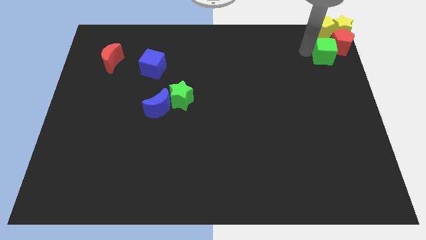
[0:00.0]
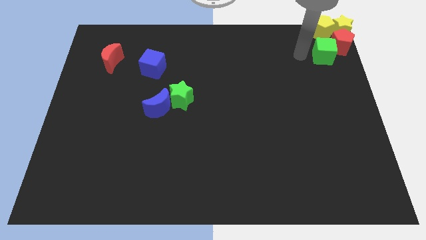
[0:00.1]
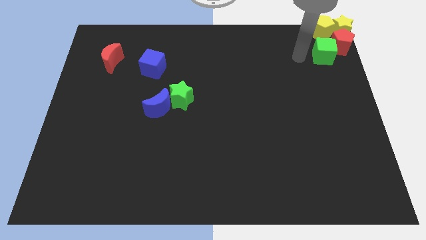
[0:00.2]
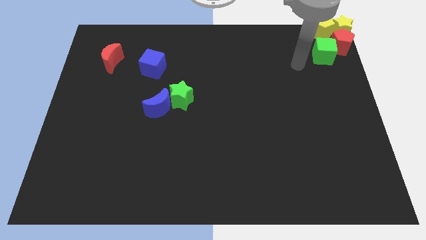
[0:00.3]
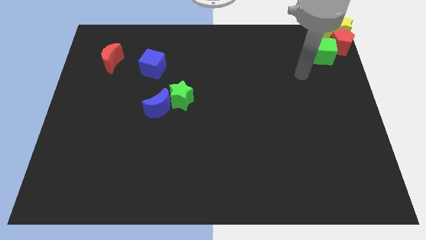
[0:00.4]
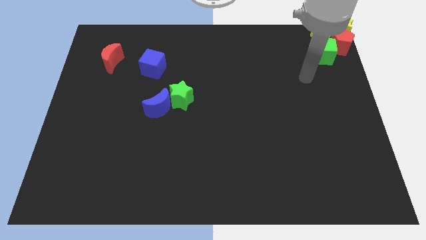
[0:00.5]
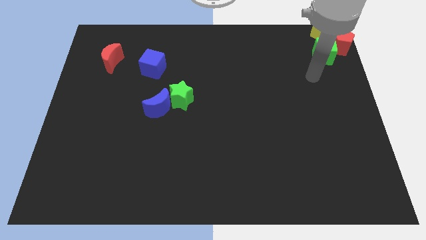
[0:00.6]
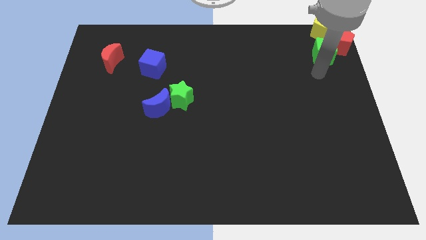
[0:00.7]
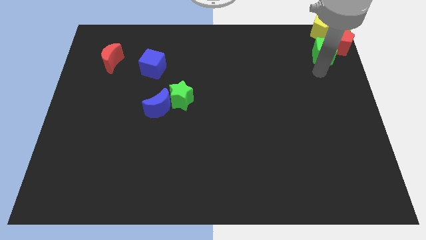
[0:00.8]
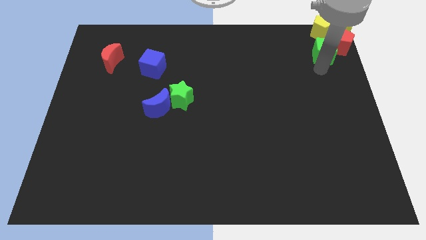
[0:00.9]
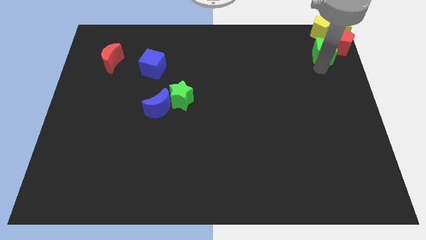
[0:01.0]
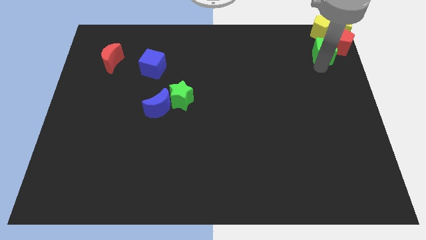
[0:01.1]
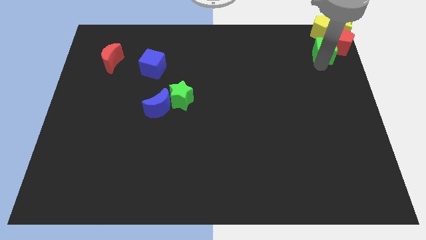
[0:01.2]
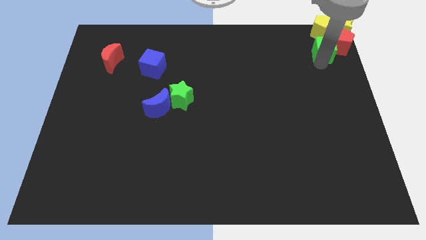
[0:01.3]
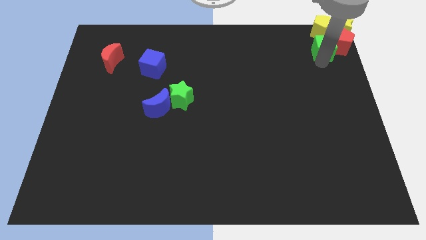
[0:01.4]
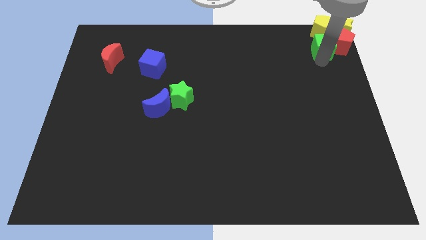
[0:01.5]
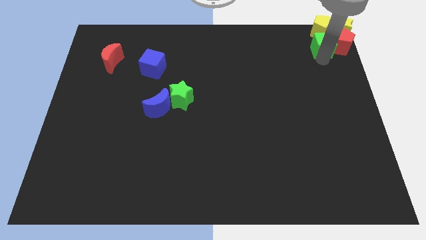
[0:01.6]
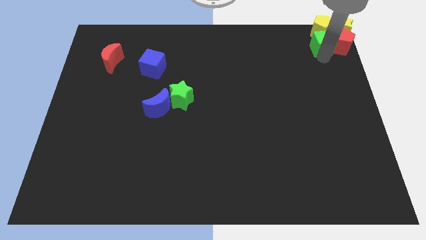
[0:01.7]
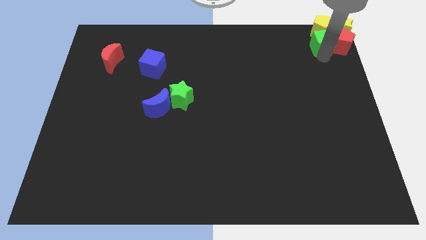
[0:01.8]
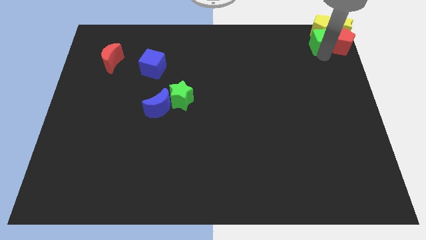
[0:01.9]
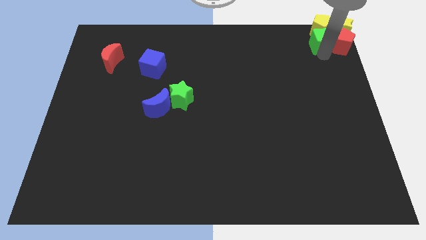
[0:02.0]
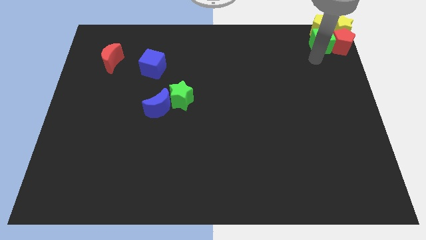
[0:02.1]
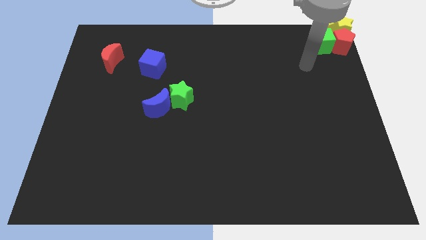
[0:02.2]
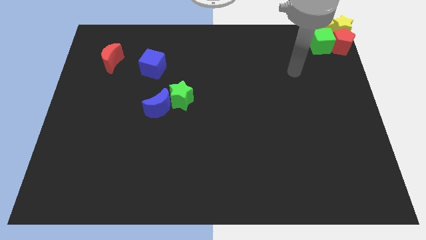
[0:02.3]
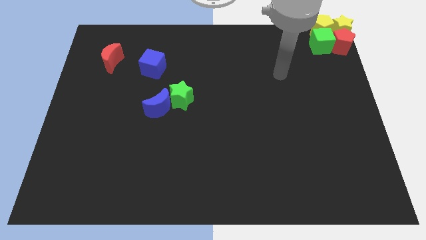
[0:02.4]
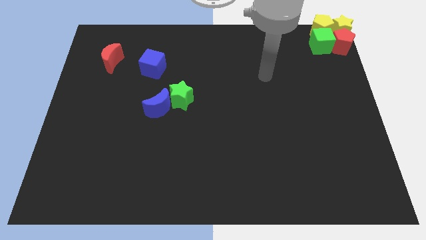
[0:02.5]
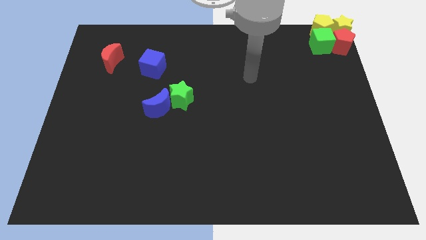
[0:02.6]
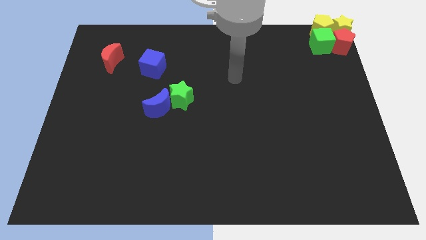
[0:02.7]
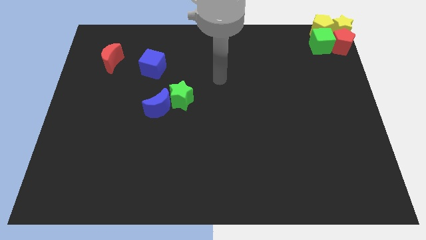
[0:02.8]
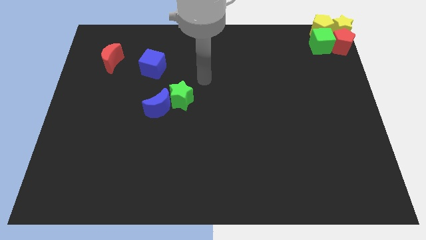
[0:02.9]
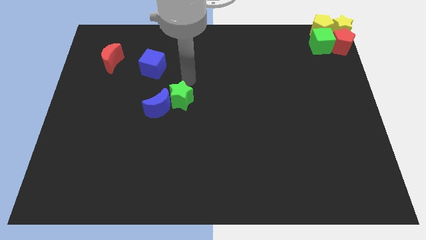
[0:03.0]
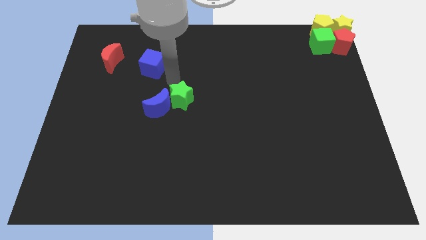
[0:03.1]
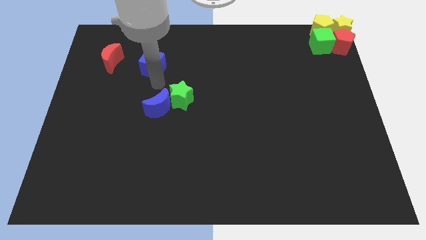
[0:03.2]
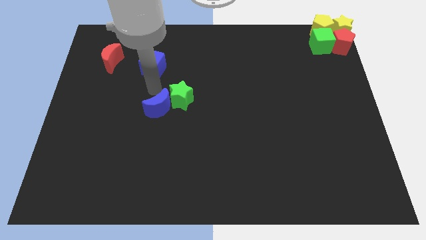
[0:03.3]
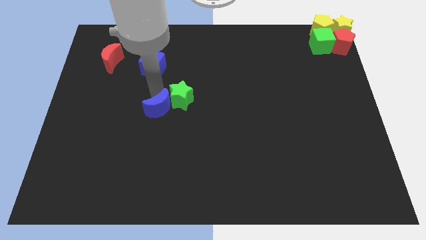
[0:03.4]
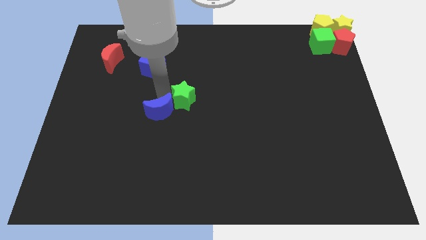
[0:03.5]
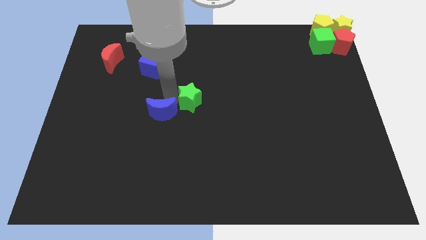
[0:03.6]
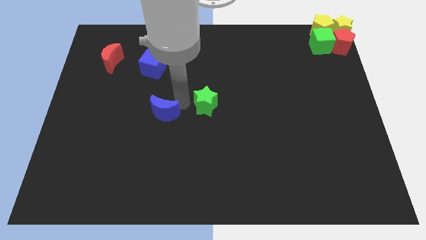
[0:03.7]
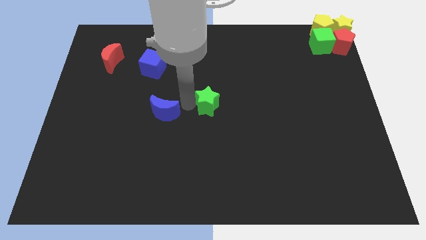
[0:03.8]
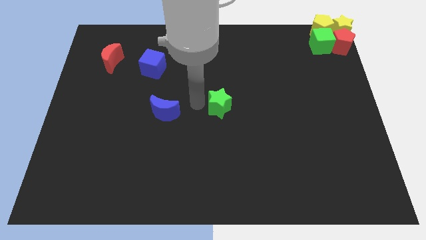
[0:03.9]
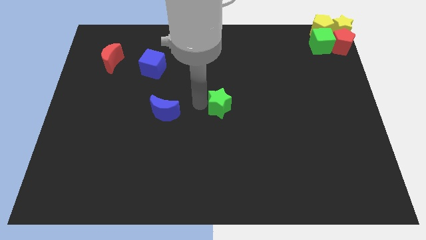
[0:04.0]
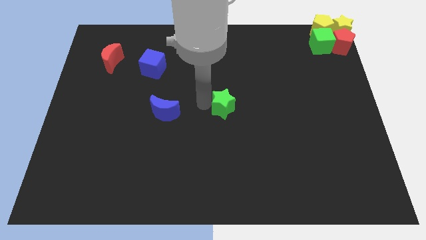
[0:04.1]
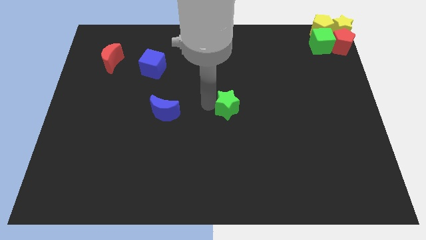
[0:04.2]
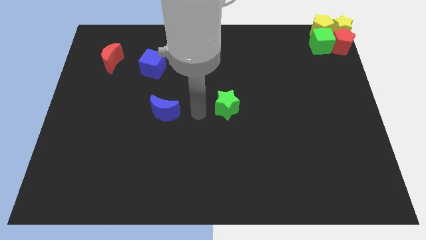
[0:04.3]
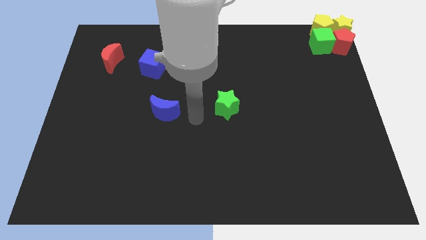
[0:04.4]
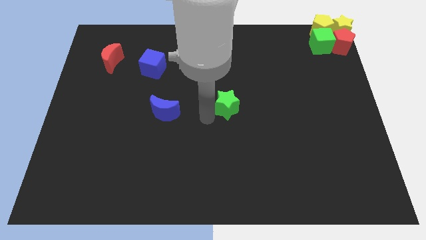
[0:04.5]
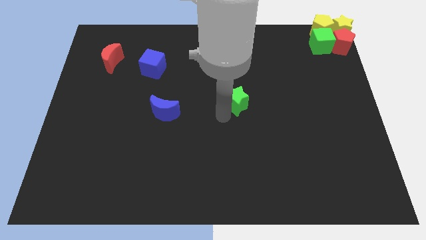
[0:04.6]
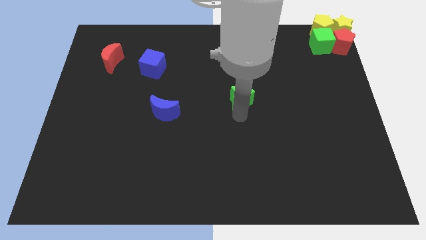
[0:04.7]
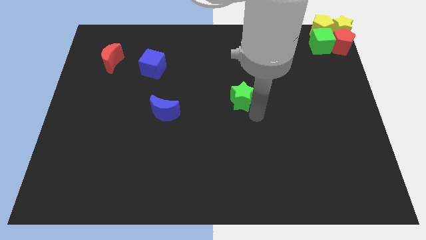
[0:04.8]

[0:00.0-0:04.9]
move green star towards the center right

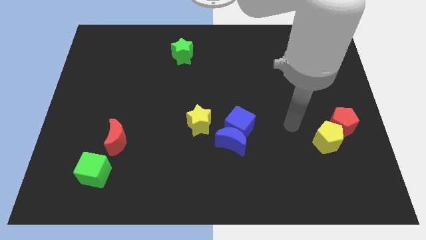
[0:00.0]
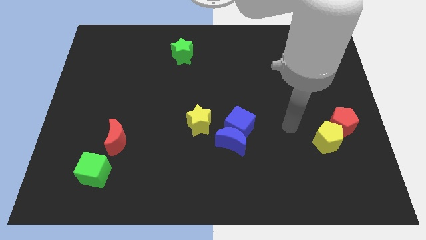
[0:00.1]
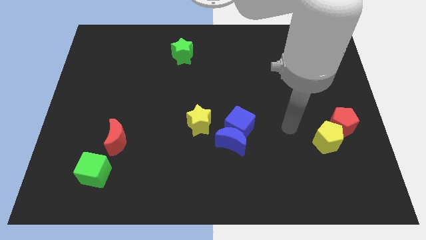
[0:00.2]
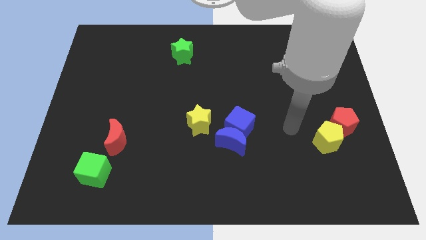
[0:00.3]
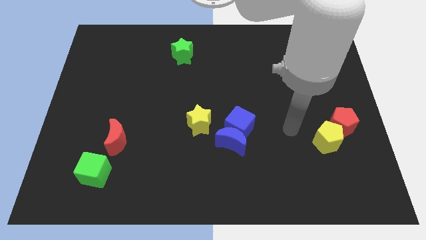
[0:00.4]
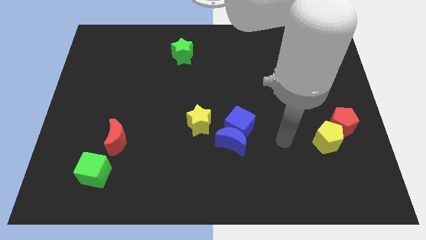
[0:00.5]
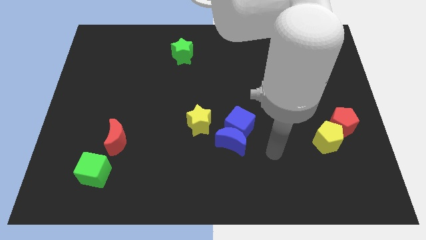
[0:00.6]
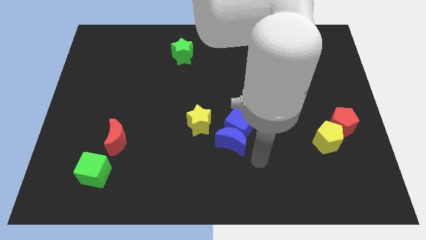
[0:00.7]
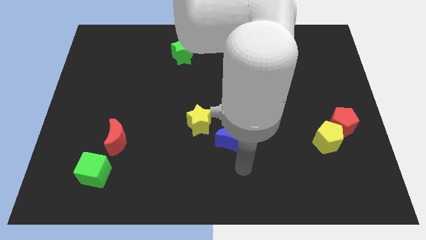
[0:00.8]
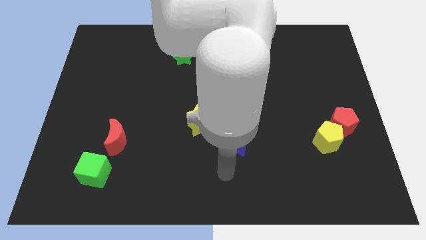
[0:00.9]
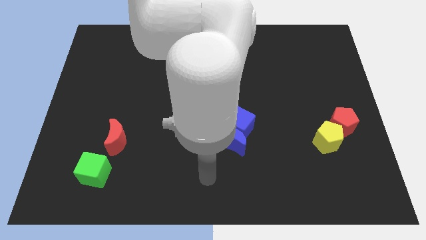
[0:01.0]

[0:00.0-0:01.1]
point your arm at the bottom of the blue crescent

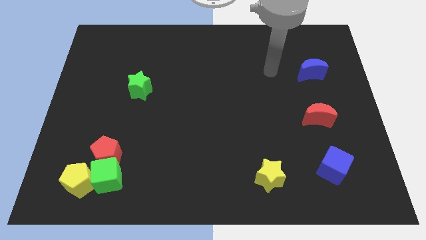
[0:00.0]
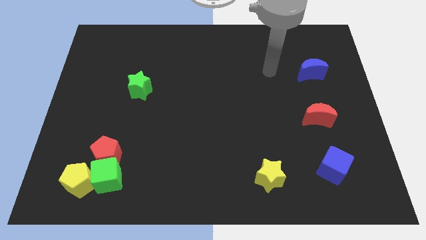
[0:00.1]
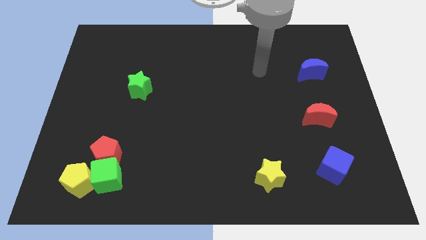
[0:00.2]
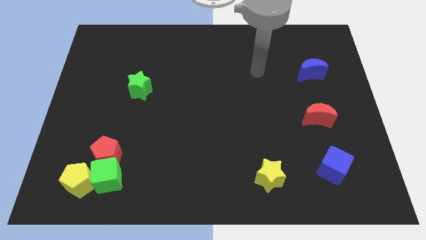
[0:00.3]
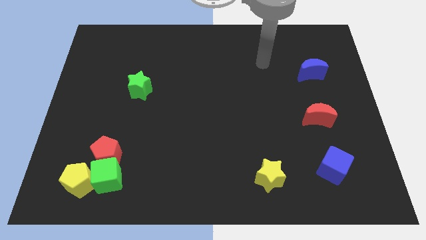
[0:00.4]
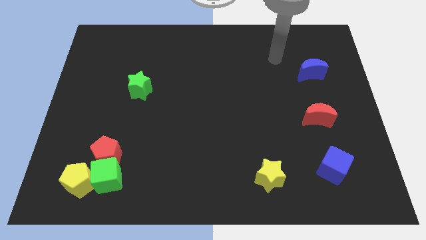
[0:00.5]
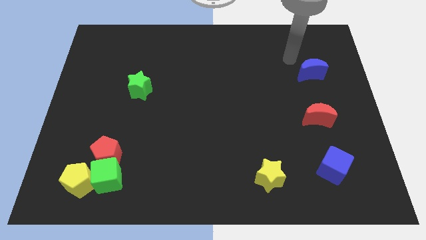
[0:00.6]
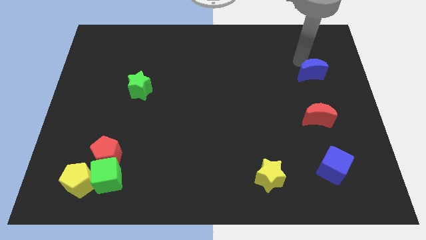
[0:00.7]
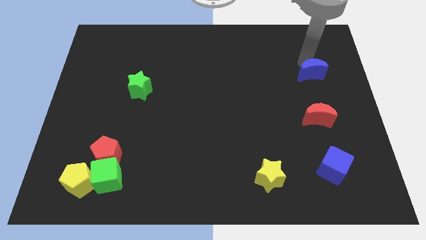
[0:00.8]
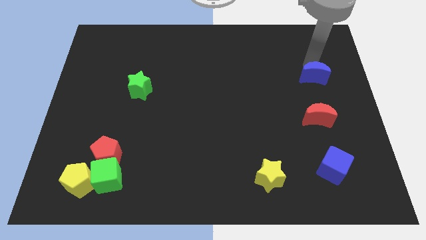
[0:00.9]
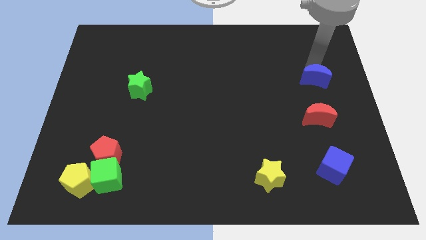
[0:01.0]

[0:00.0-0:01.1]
place the blue crescent above the red crescent

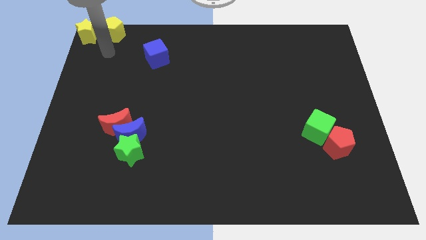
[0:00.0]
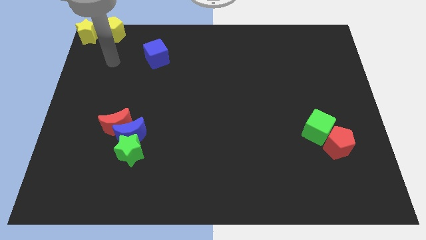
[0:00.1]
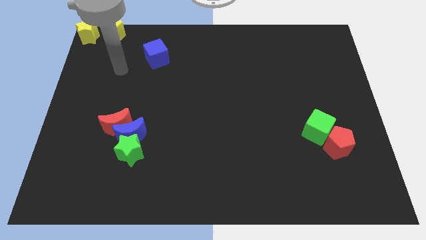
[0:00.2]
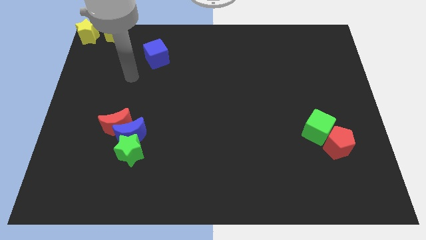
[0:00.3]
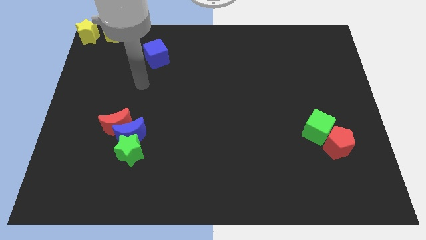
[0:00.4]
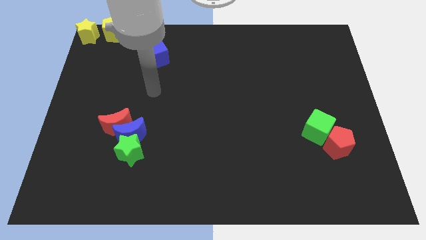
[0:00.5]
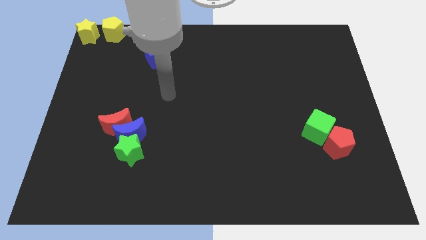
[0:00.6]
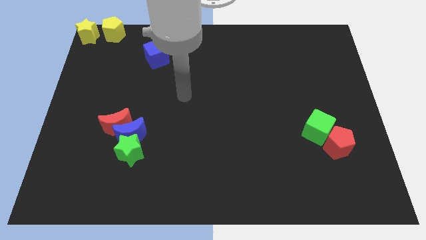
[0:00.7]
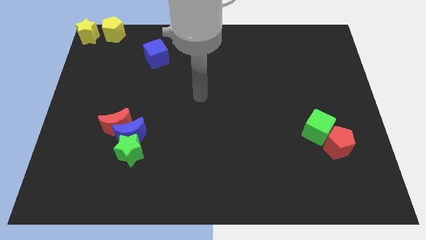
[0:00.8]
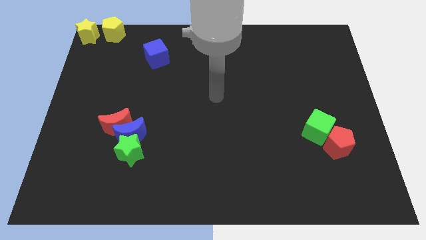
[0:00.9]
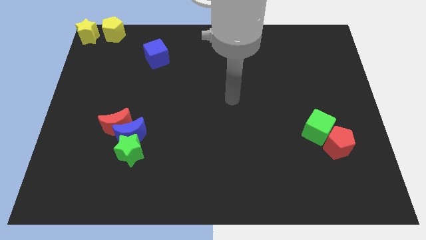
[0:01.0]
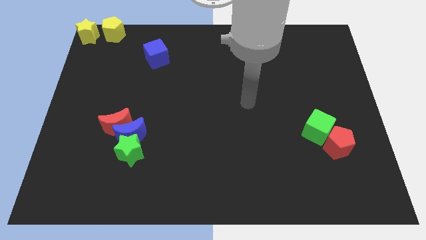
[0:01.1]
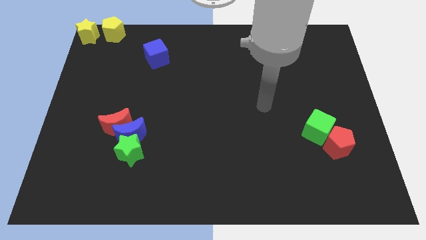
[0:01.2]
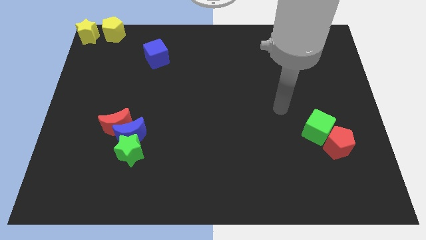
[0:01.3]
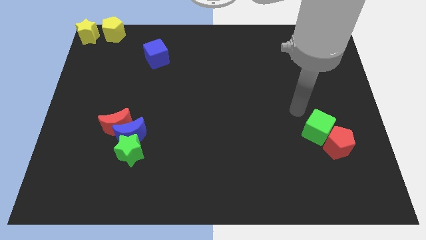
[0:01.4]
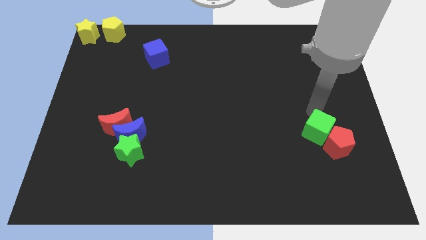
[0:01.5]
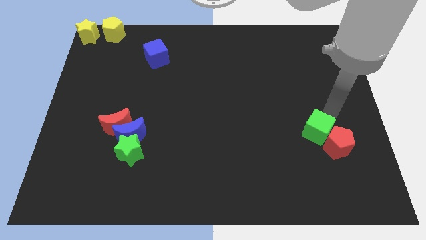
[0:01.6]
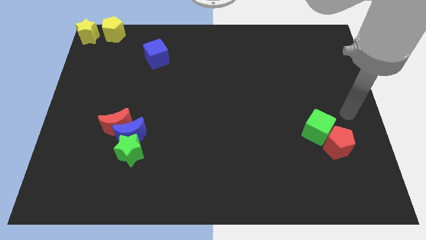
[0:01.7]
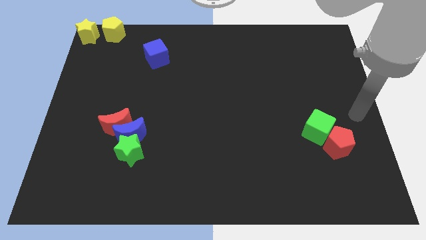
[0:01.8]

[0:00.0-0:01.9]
move your arm away from the yellow pentagon
